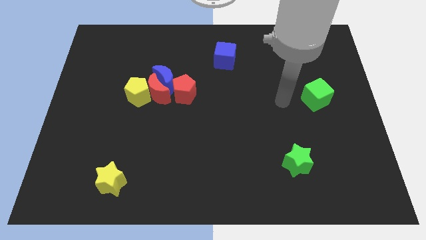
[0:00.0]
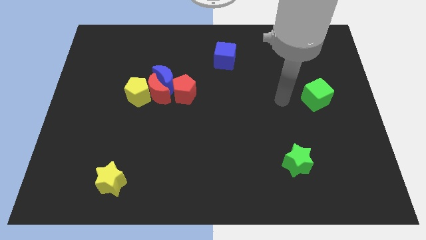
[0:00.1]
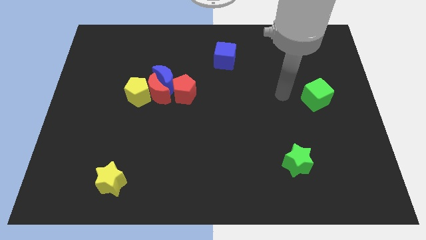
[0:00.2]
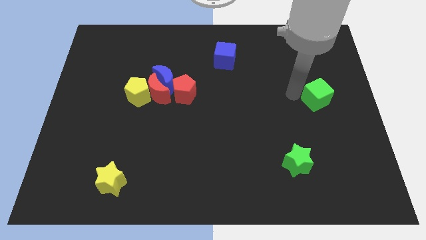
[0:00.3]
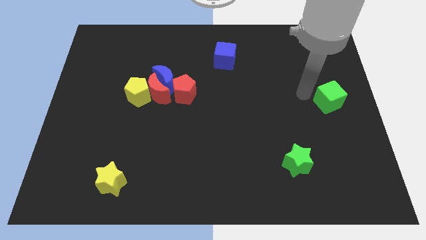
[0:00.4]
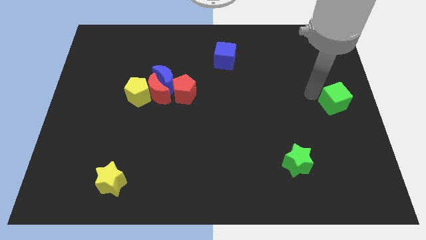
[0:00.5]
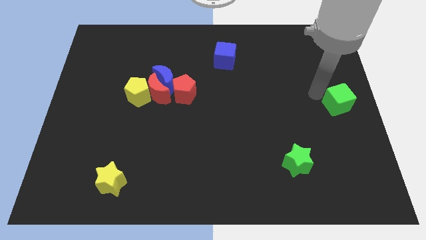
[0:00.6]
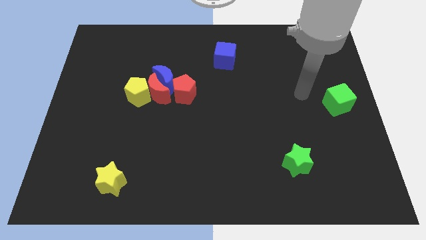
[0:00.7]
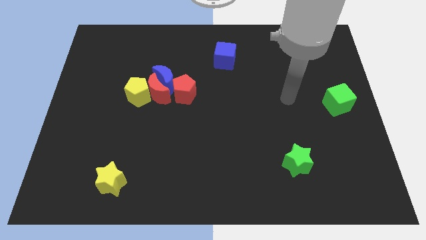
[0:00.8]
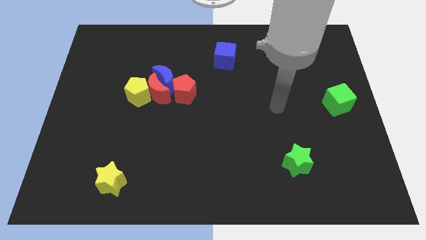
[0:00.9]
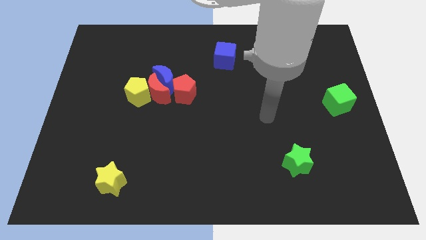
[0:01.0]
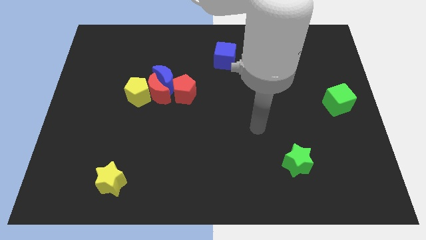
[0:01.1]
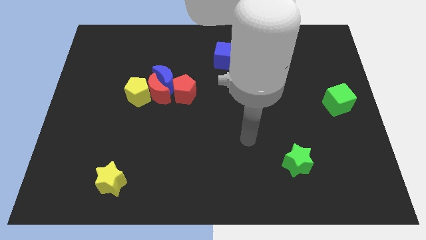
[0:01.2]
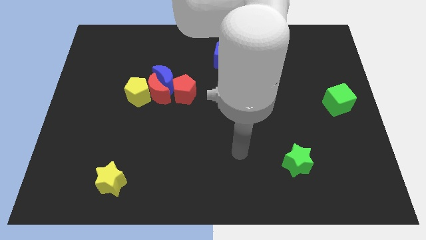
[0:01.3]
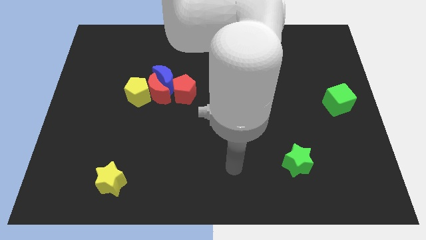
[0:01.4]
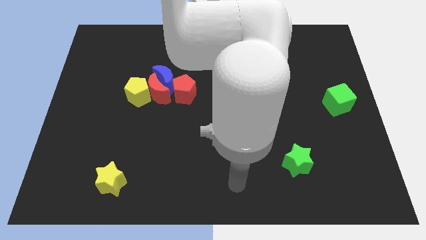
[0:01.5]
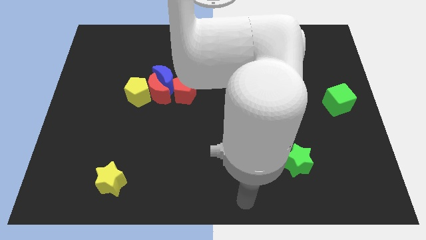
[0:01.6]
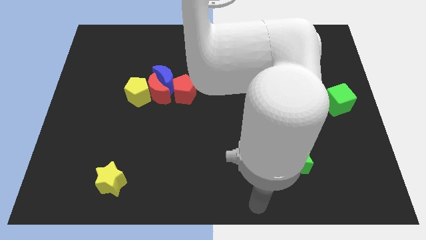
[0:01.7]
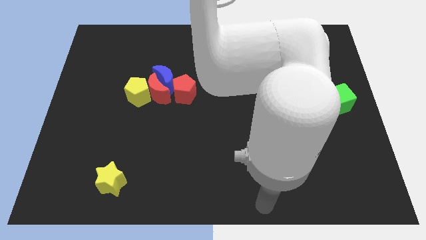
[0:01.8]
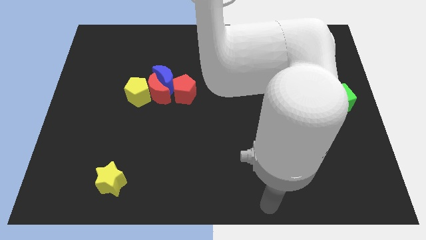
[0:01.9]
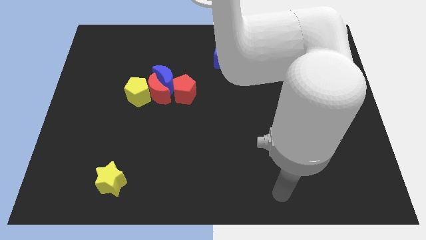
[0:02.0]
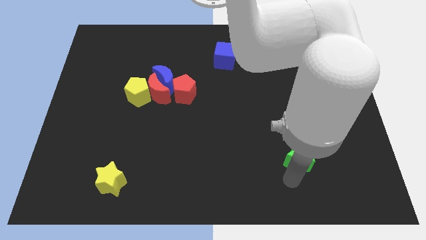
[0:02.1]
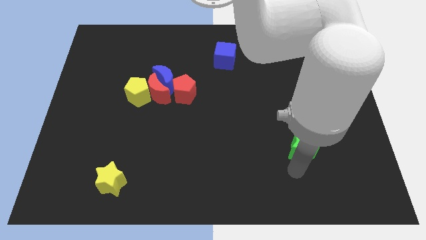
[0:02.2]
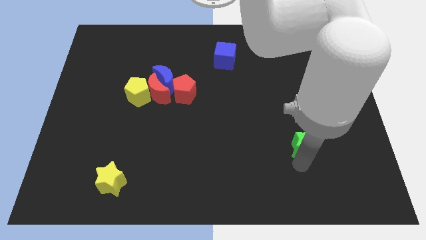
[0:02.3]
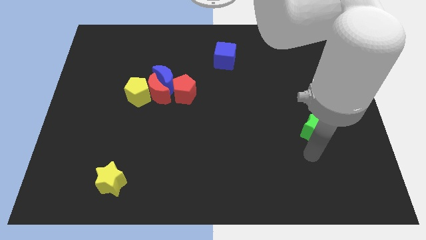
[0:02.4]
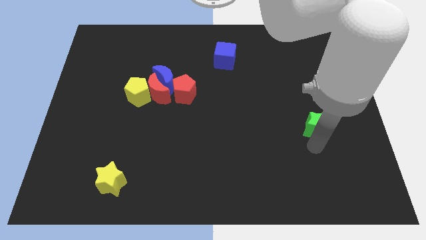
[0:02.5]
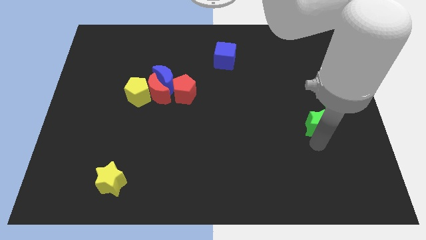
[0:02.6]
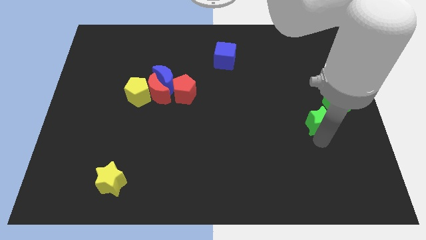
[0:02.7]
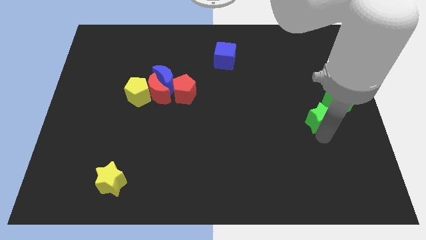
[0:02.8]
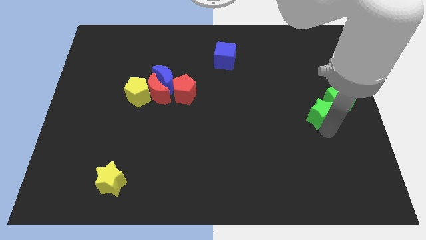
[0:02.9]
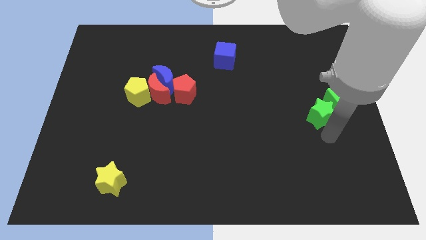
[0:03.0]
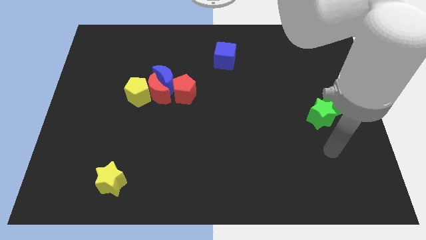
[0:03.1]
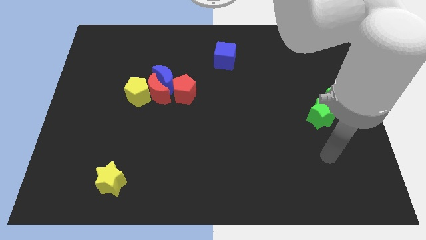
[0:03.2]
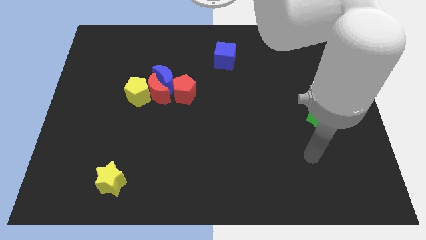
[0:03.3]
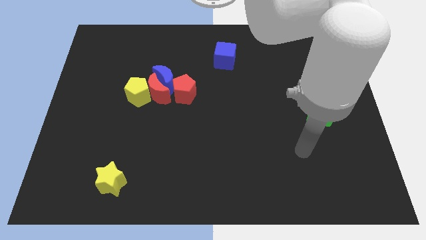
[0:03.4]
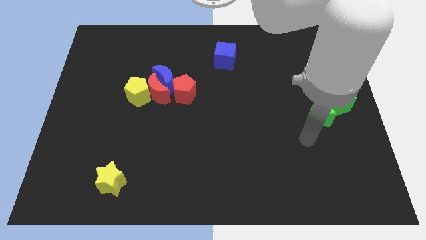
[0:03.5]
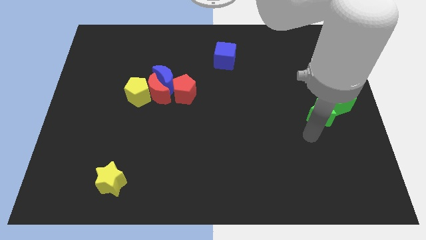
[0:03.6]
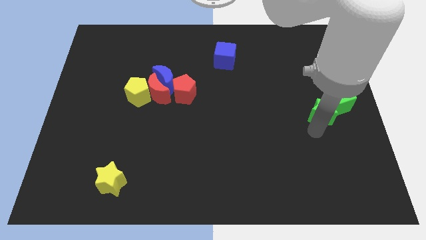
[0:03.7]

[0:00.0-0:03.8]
push the green star close to the green cube

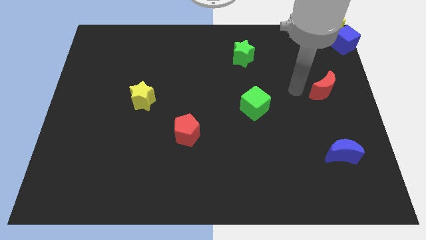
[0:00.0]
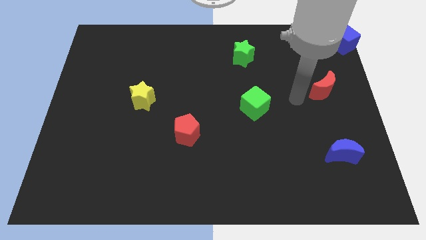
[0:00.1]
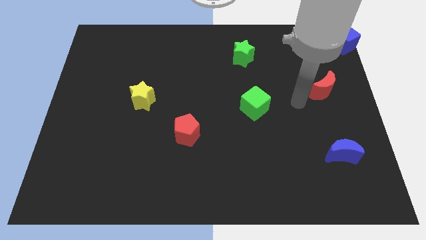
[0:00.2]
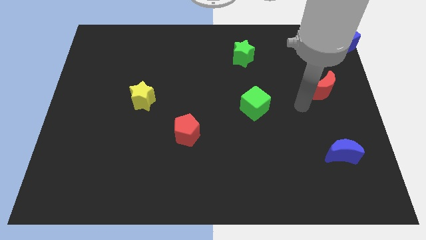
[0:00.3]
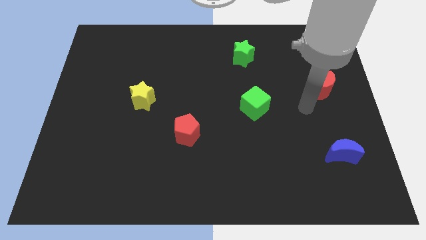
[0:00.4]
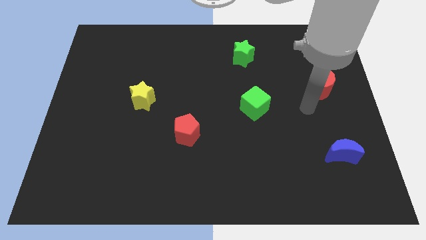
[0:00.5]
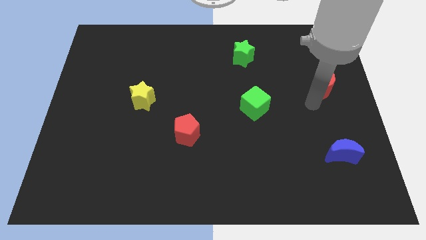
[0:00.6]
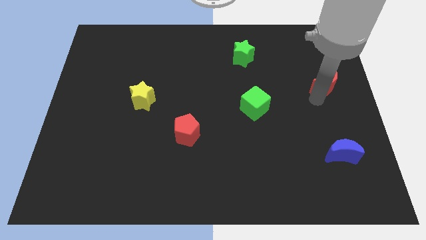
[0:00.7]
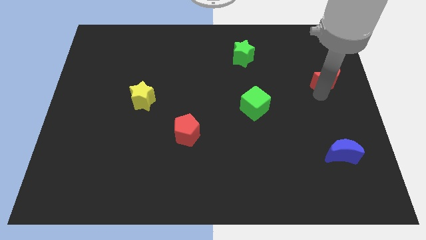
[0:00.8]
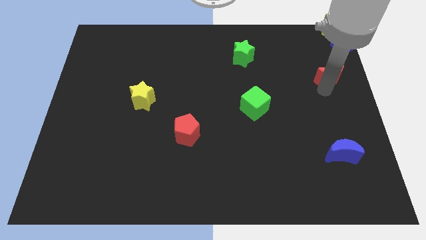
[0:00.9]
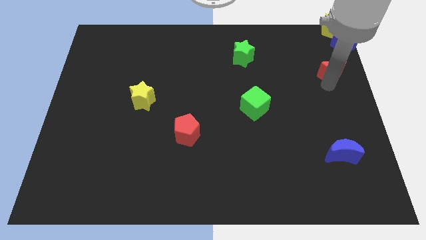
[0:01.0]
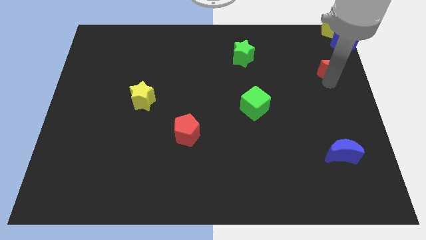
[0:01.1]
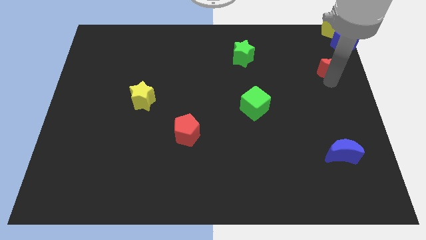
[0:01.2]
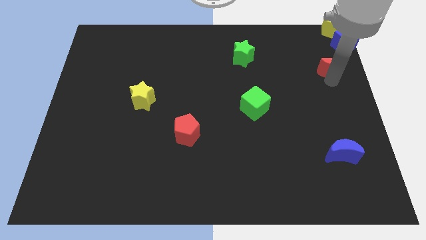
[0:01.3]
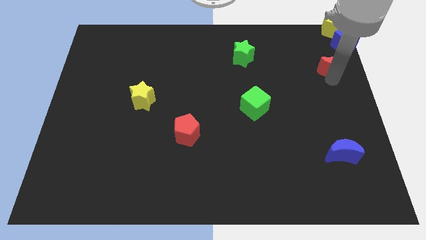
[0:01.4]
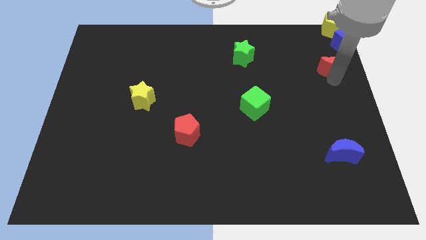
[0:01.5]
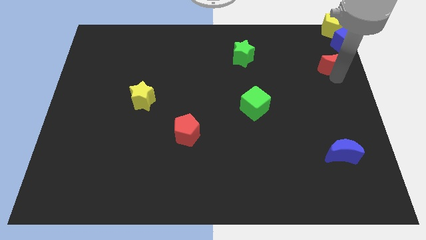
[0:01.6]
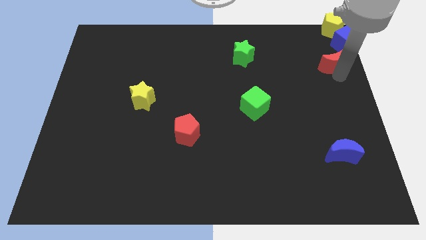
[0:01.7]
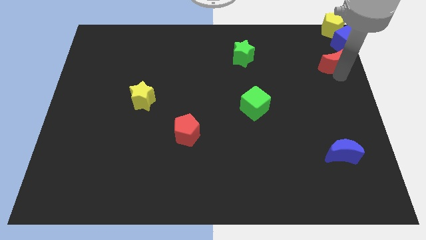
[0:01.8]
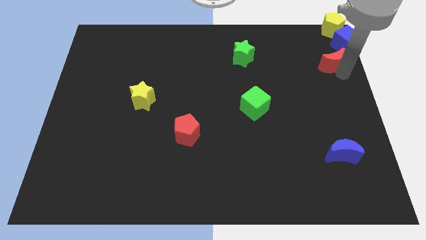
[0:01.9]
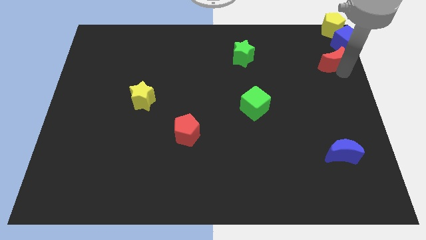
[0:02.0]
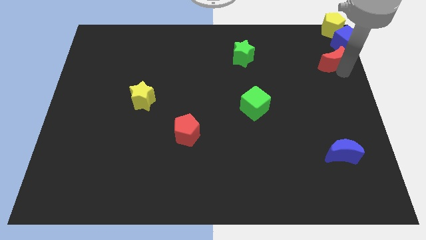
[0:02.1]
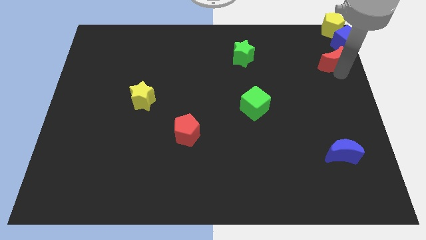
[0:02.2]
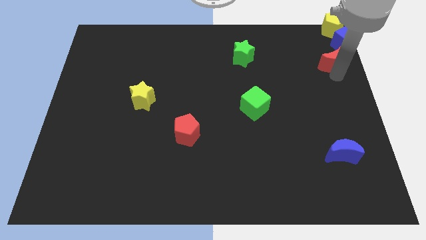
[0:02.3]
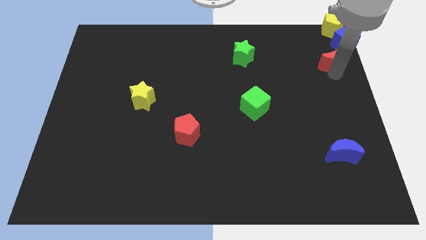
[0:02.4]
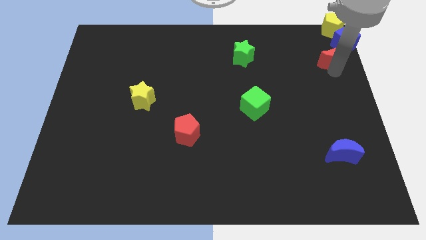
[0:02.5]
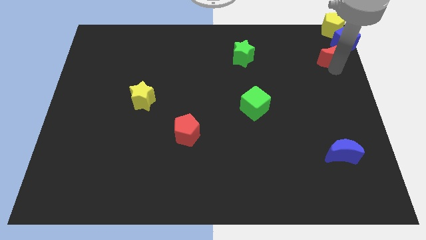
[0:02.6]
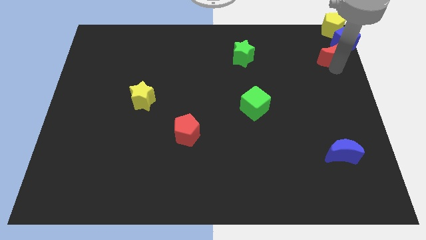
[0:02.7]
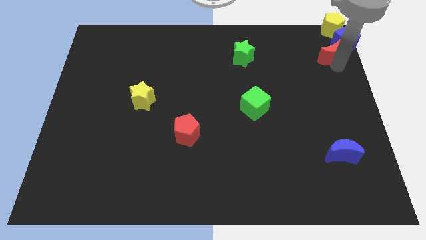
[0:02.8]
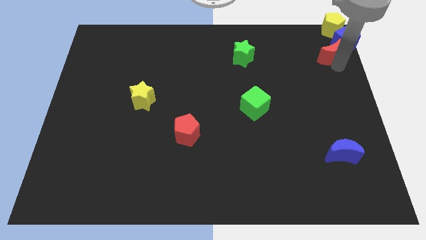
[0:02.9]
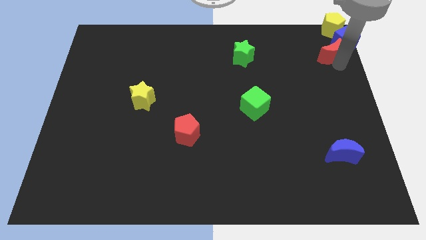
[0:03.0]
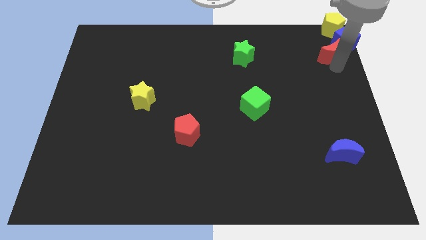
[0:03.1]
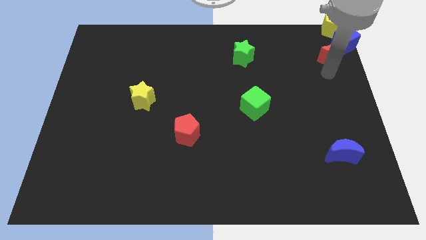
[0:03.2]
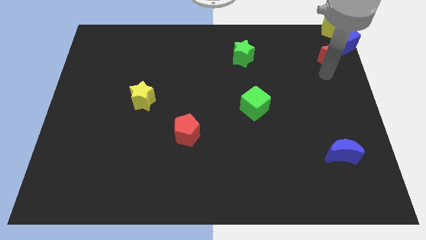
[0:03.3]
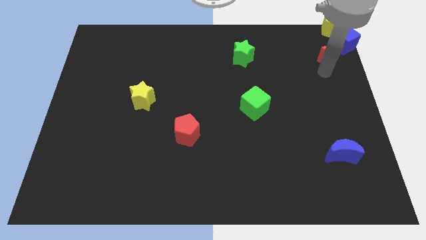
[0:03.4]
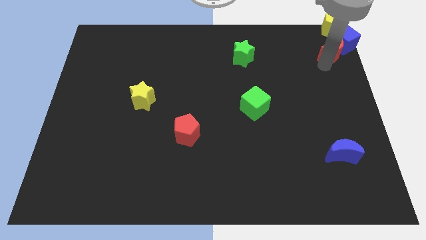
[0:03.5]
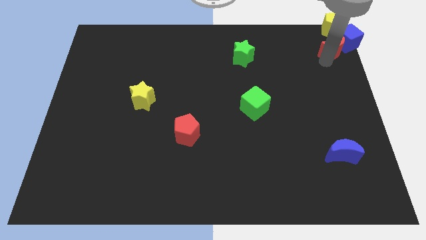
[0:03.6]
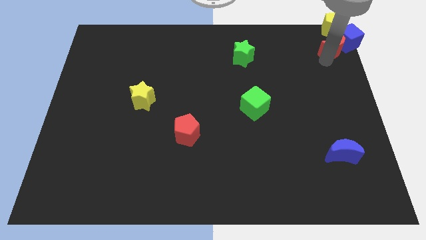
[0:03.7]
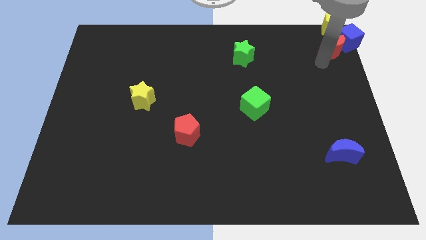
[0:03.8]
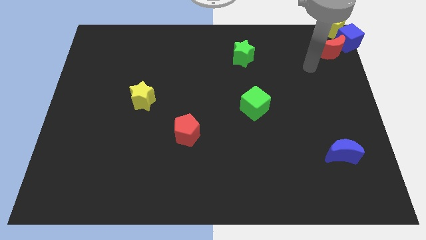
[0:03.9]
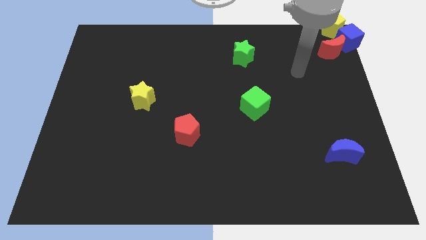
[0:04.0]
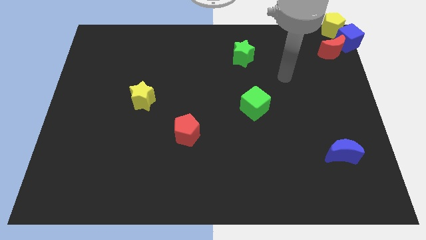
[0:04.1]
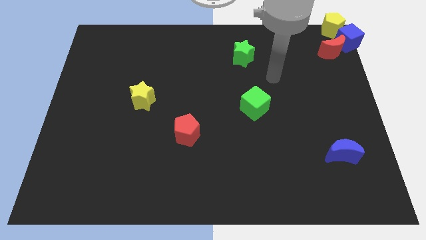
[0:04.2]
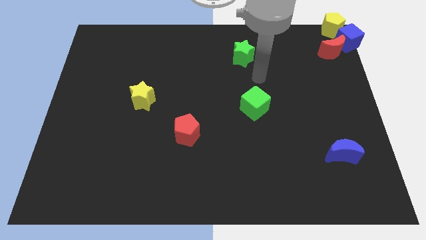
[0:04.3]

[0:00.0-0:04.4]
push the red moon to the bottom left side of the blue cube

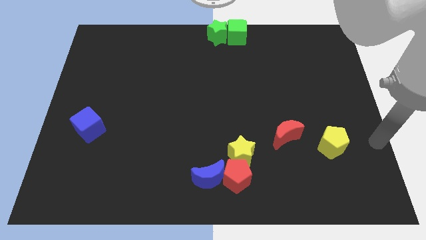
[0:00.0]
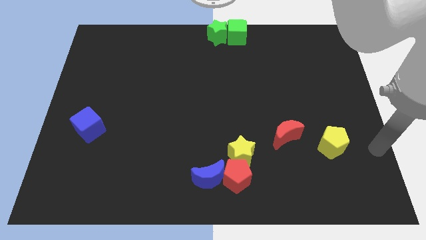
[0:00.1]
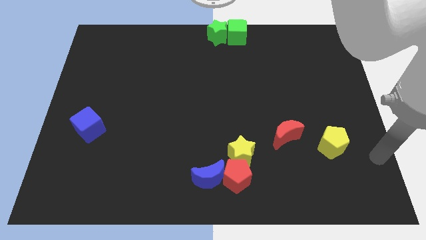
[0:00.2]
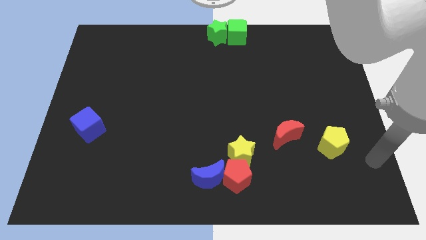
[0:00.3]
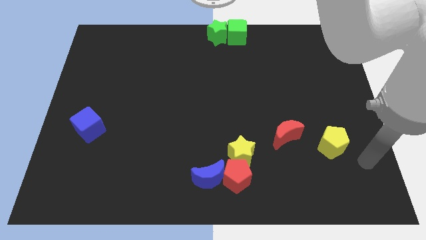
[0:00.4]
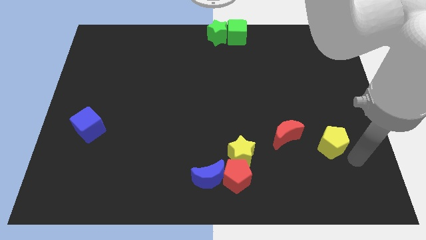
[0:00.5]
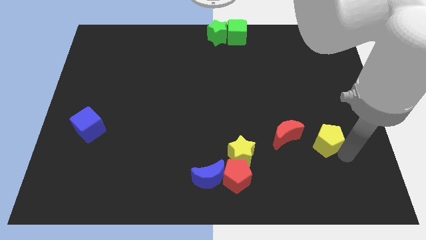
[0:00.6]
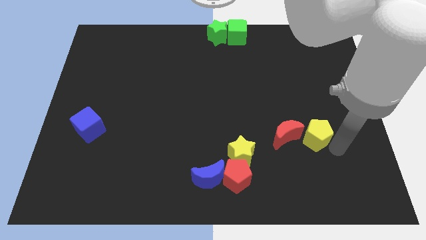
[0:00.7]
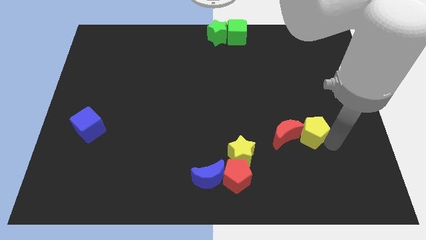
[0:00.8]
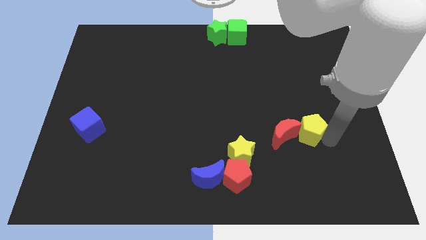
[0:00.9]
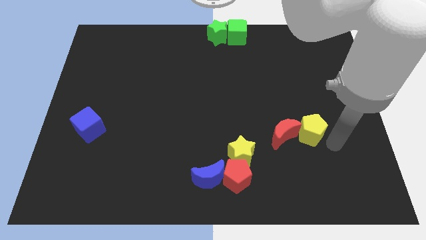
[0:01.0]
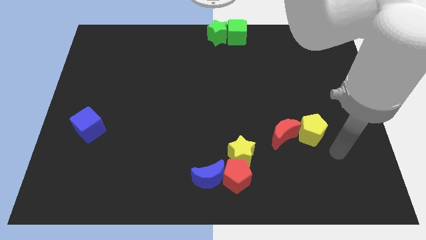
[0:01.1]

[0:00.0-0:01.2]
push the yellow pentagon close to the red crescent
